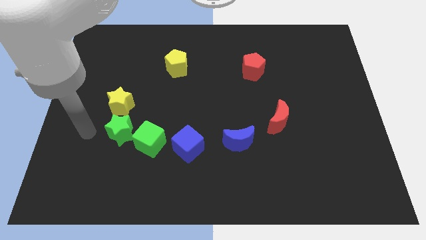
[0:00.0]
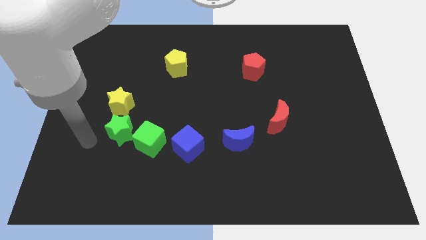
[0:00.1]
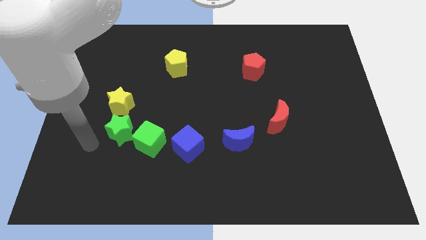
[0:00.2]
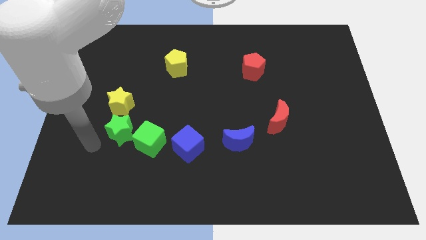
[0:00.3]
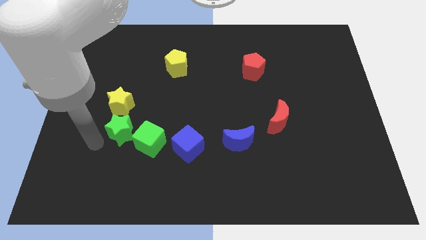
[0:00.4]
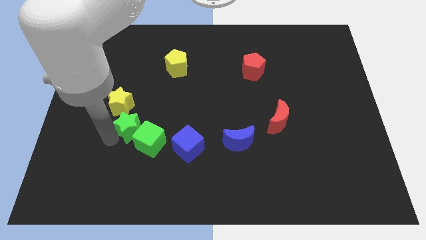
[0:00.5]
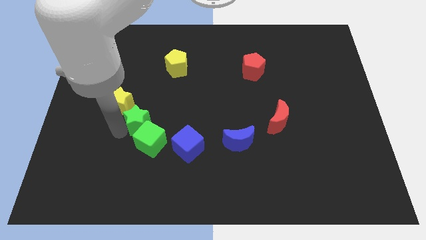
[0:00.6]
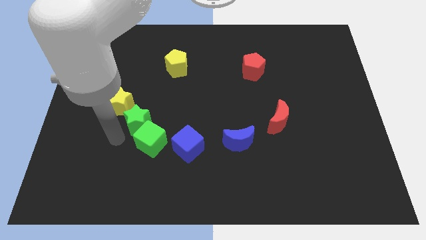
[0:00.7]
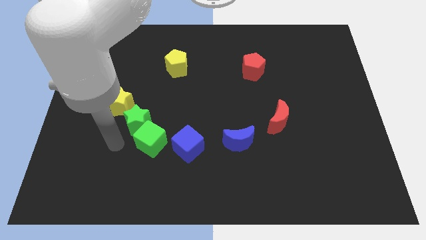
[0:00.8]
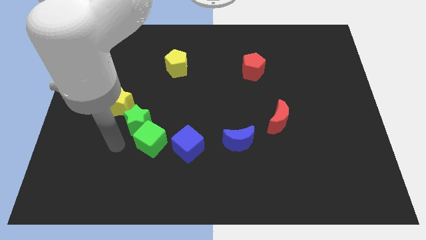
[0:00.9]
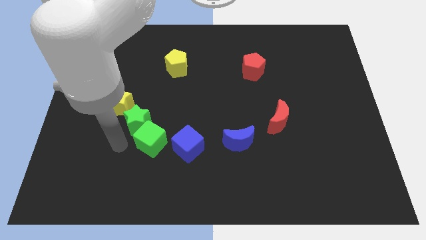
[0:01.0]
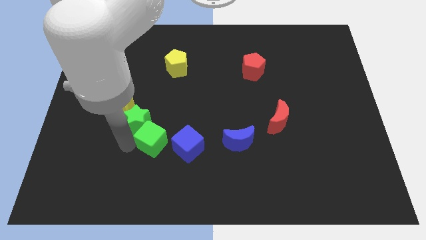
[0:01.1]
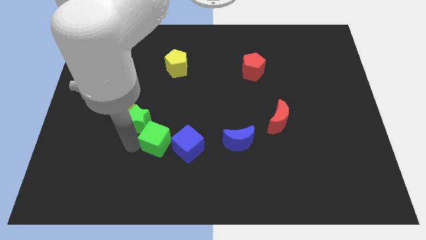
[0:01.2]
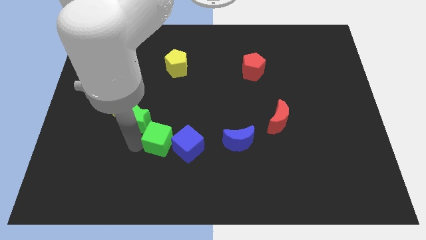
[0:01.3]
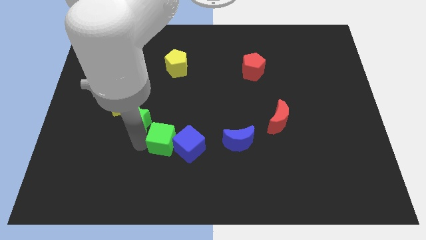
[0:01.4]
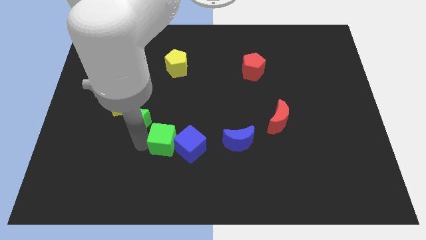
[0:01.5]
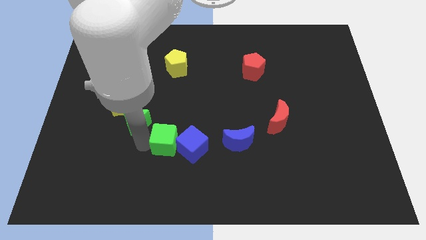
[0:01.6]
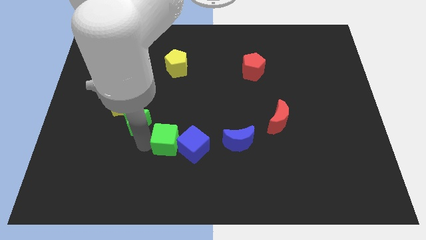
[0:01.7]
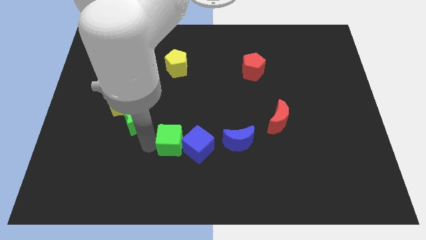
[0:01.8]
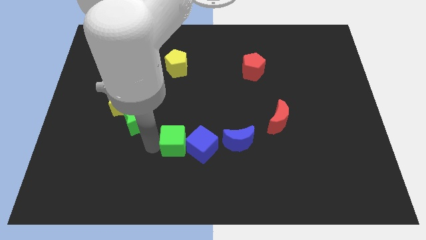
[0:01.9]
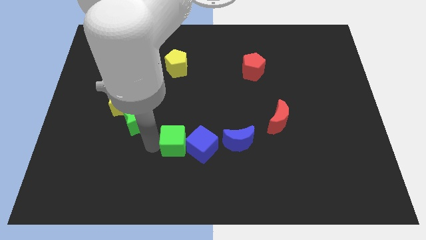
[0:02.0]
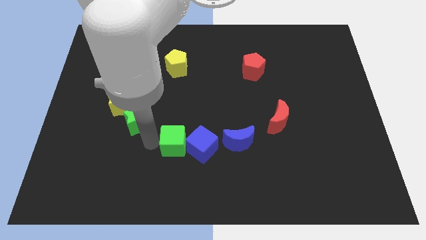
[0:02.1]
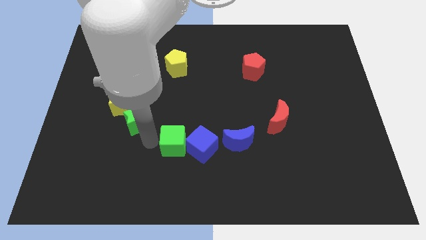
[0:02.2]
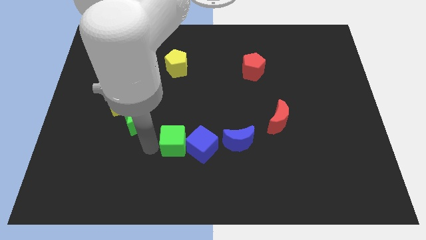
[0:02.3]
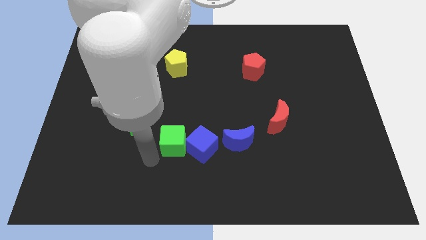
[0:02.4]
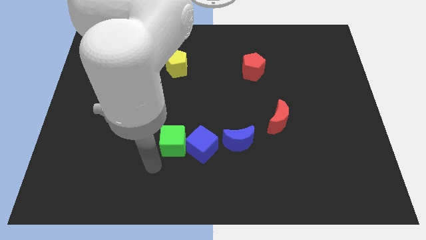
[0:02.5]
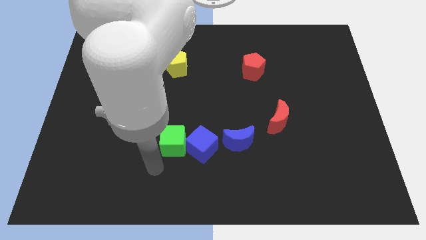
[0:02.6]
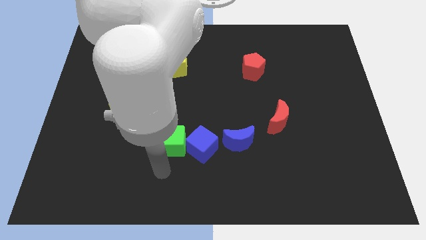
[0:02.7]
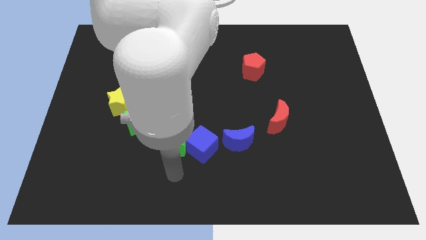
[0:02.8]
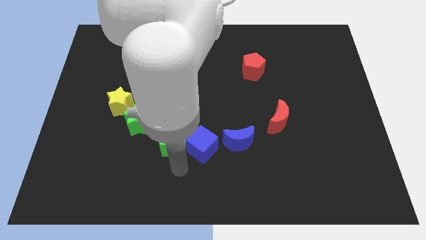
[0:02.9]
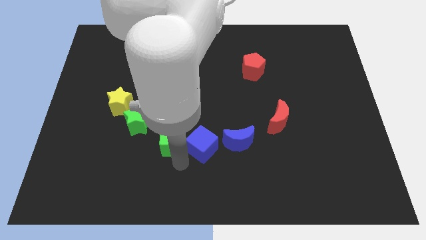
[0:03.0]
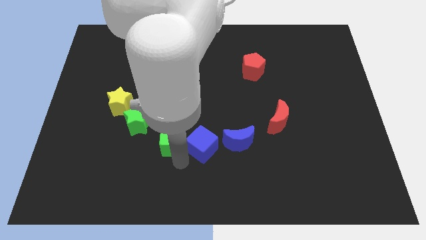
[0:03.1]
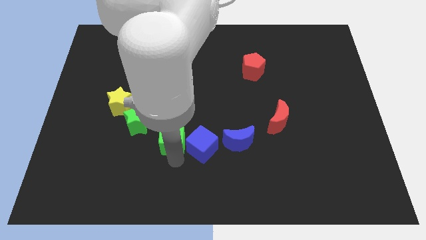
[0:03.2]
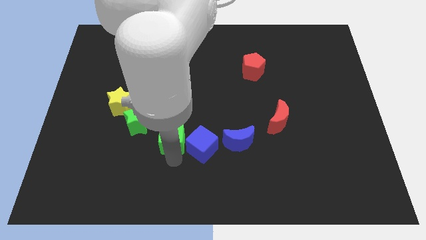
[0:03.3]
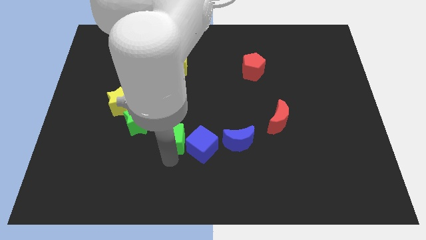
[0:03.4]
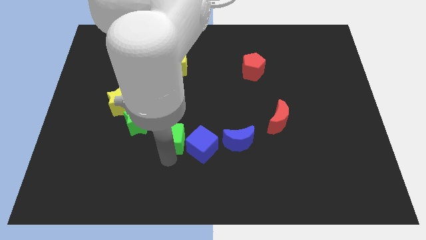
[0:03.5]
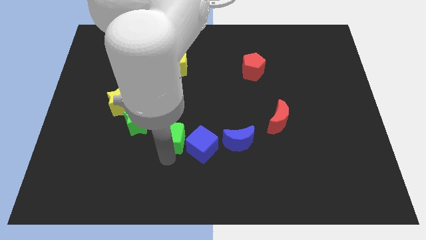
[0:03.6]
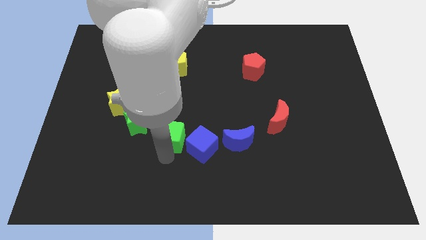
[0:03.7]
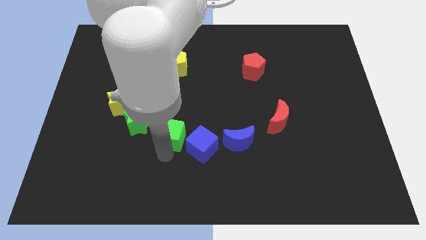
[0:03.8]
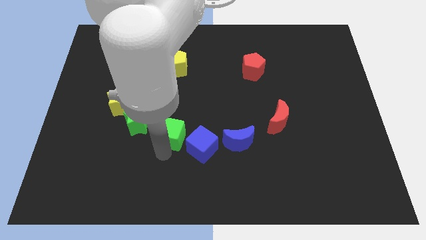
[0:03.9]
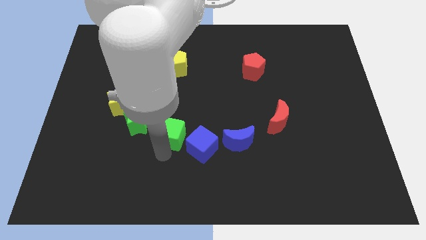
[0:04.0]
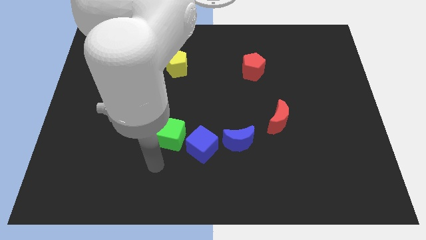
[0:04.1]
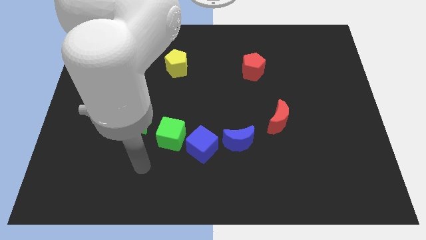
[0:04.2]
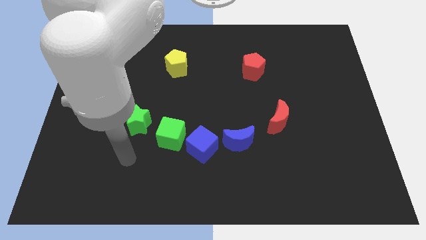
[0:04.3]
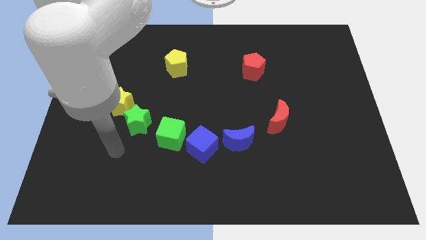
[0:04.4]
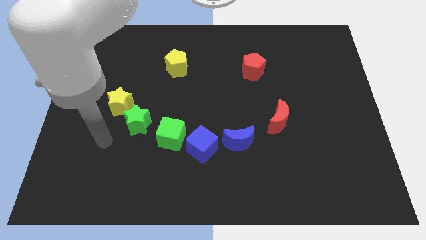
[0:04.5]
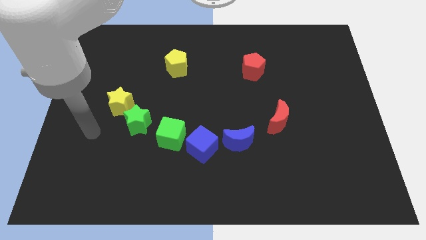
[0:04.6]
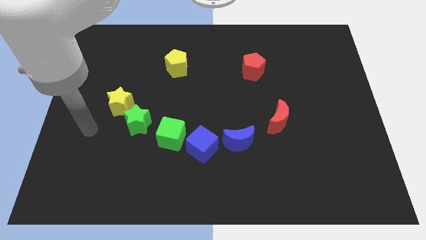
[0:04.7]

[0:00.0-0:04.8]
slightly adjust the green blocks to the left side of the blue cube

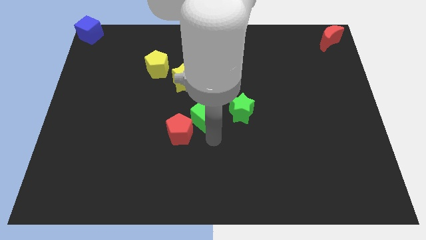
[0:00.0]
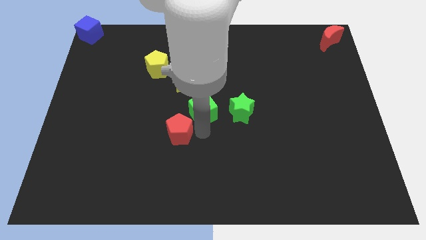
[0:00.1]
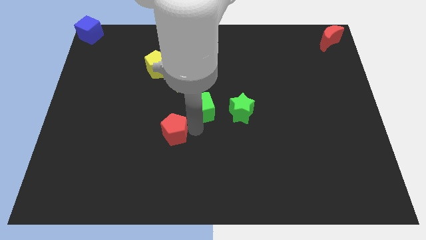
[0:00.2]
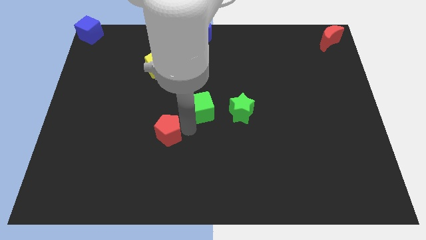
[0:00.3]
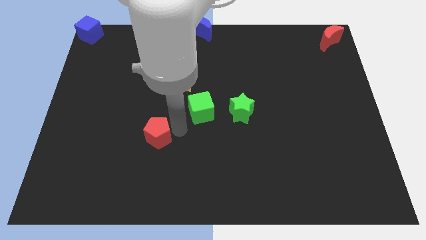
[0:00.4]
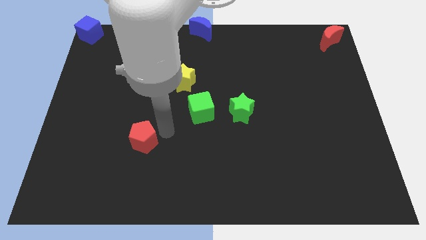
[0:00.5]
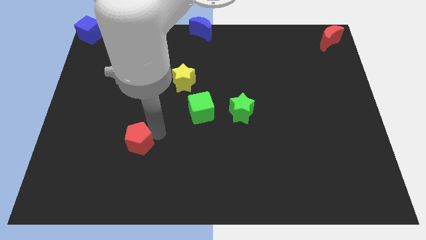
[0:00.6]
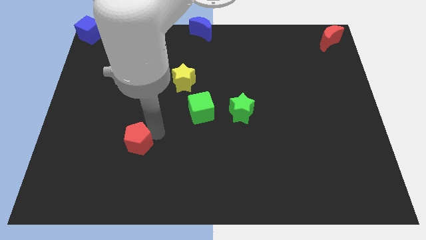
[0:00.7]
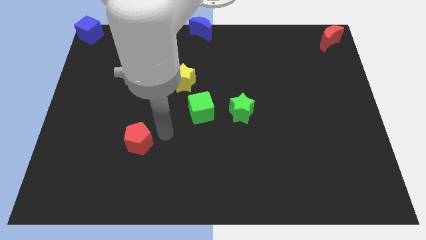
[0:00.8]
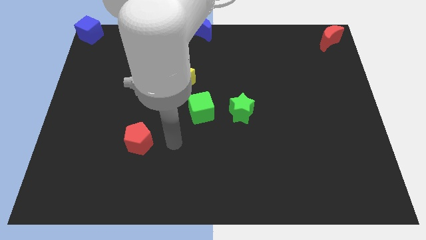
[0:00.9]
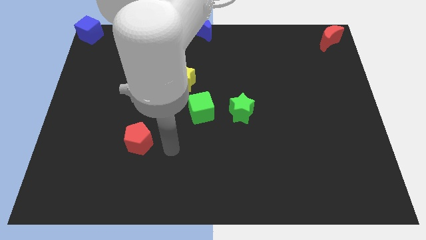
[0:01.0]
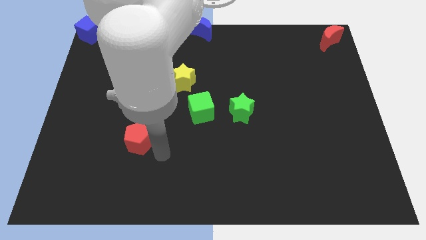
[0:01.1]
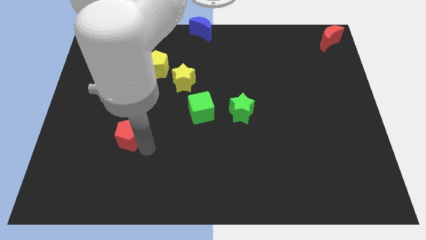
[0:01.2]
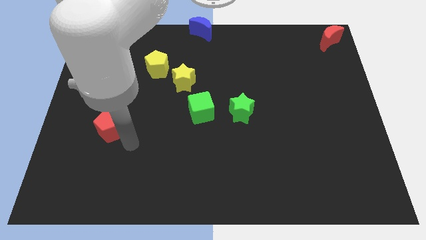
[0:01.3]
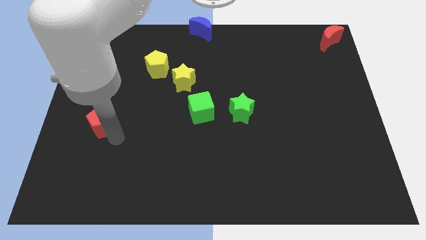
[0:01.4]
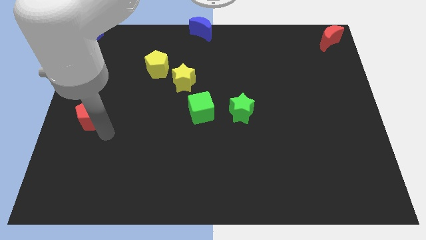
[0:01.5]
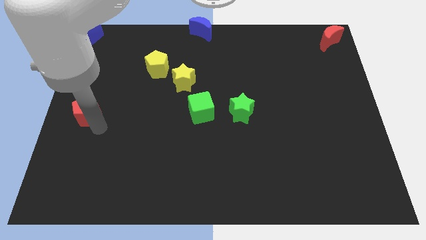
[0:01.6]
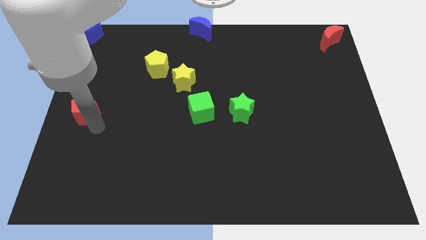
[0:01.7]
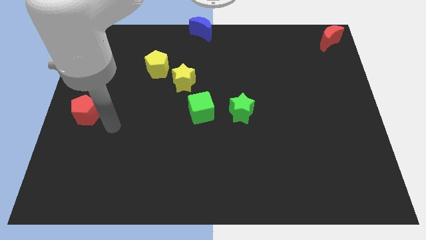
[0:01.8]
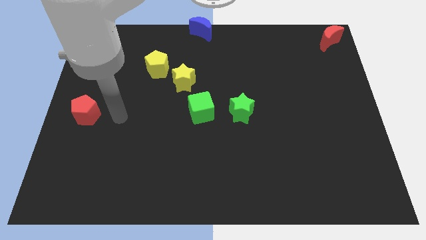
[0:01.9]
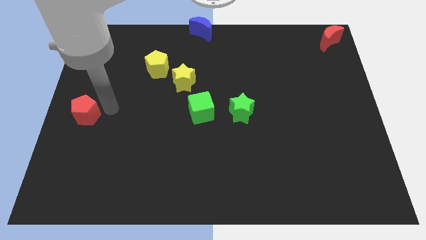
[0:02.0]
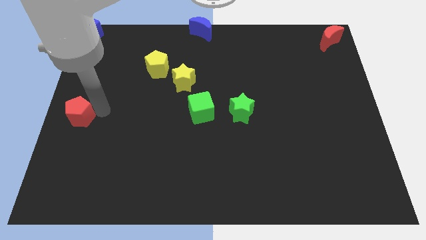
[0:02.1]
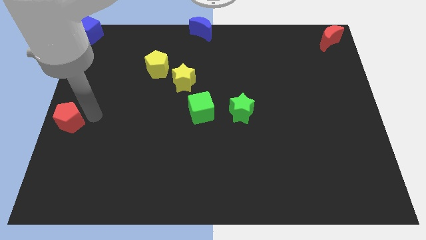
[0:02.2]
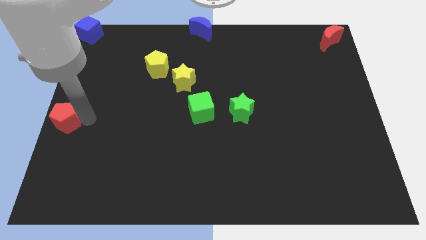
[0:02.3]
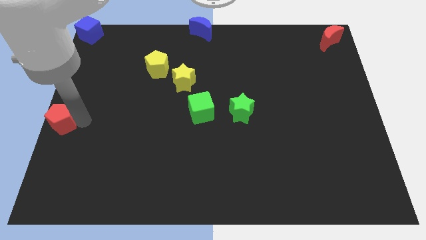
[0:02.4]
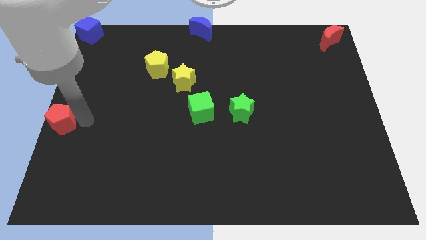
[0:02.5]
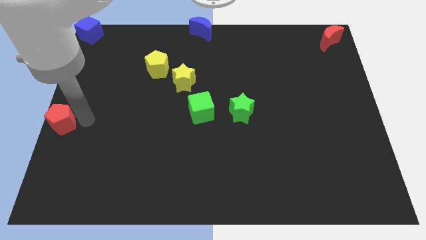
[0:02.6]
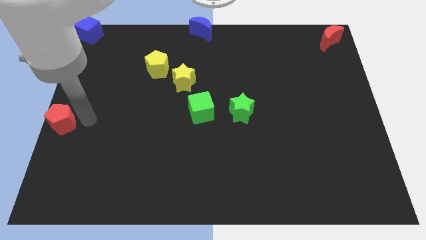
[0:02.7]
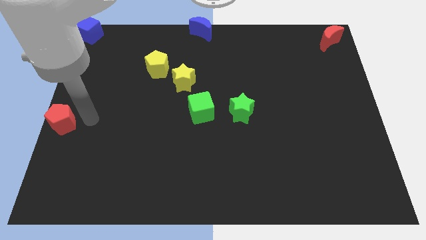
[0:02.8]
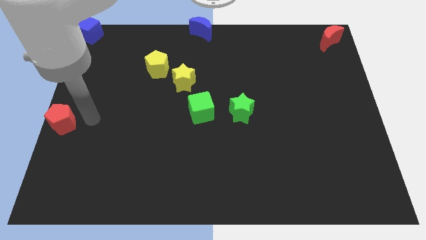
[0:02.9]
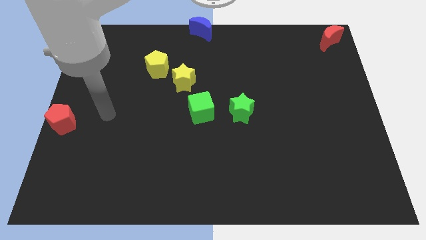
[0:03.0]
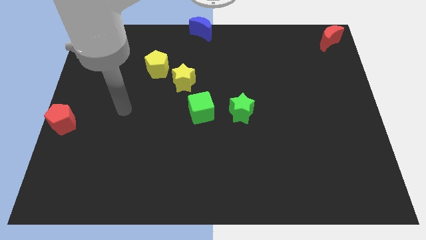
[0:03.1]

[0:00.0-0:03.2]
separate the green cube and red pentagon

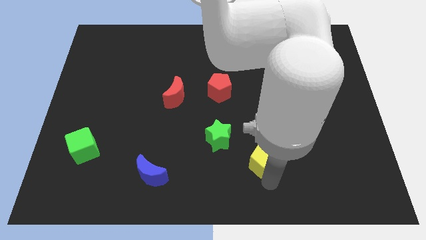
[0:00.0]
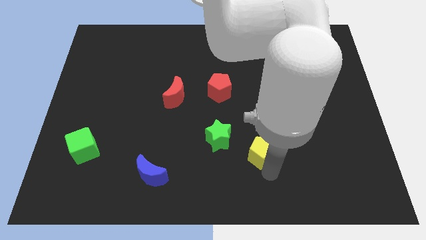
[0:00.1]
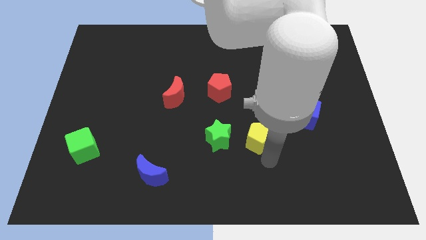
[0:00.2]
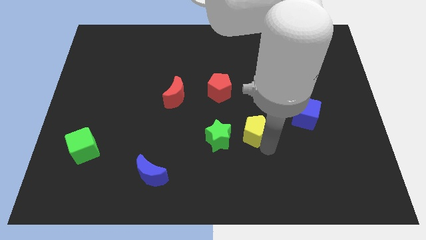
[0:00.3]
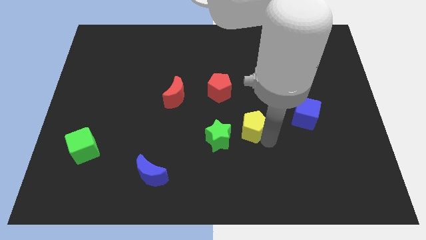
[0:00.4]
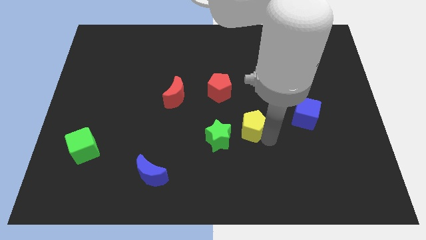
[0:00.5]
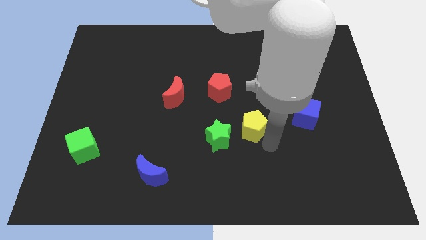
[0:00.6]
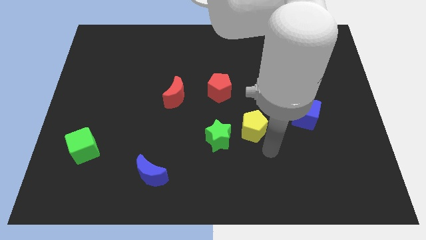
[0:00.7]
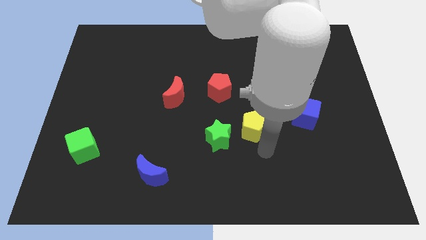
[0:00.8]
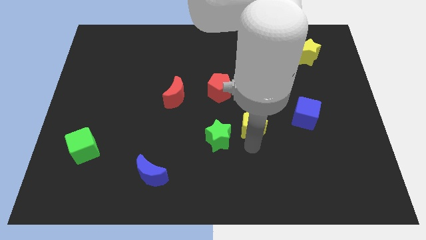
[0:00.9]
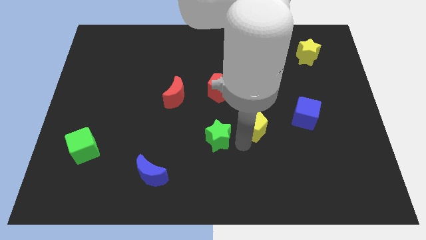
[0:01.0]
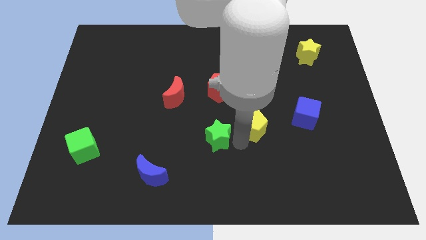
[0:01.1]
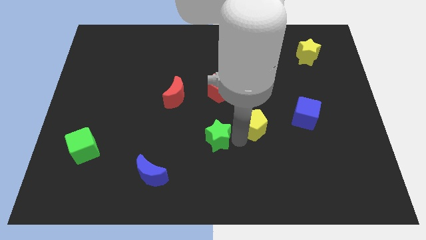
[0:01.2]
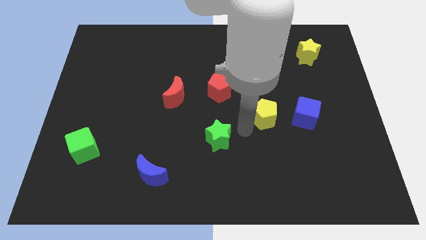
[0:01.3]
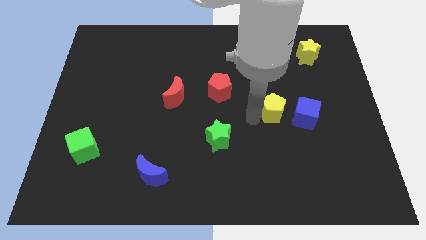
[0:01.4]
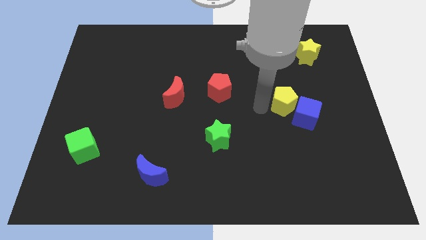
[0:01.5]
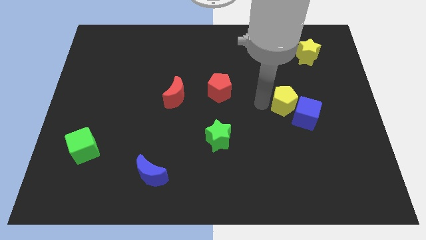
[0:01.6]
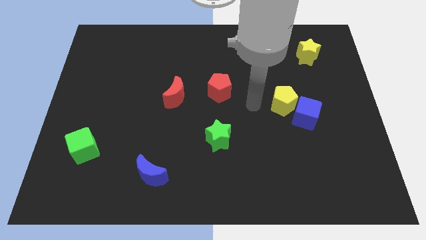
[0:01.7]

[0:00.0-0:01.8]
push the yellow pentagon into the blue cube
